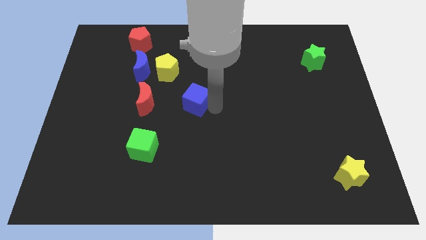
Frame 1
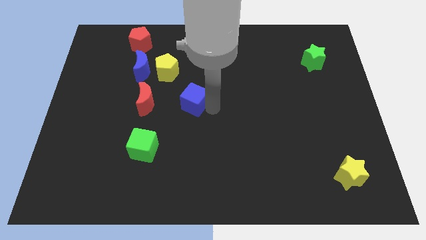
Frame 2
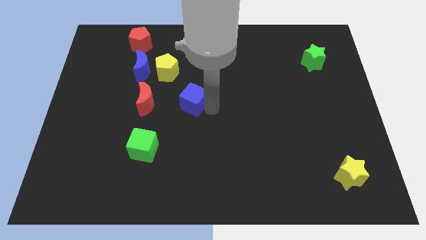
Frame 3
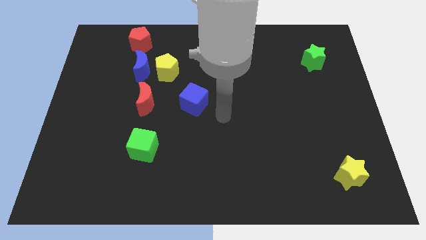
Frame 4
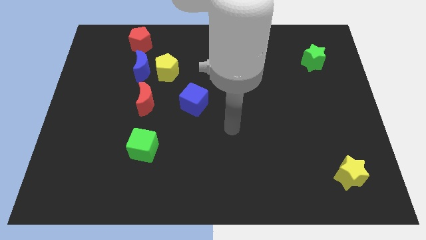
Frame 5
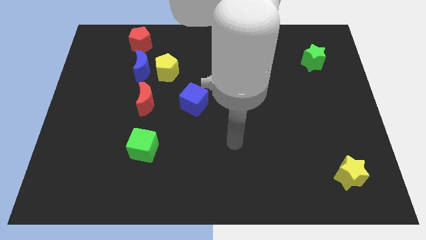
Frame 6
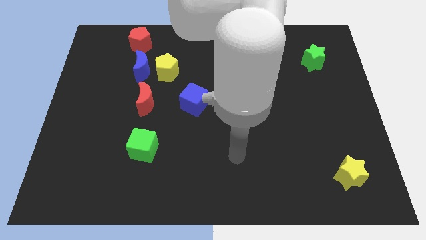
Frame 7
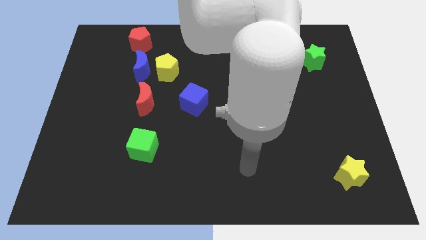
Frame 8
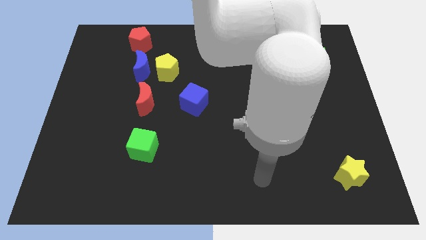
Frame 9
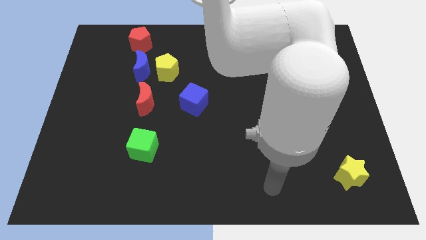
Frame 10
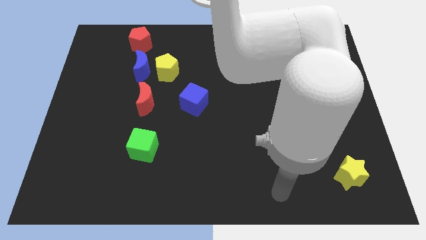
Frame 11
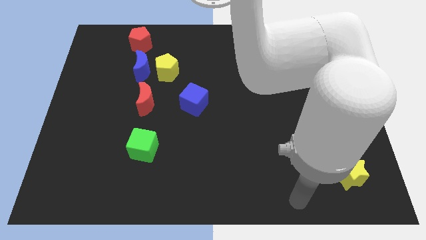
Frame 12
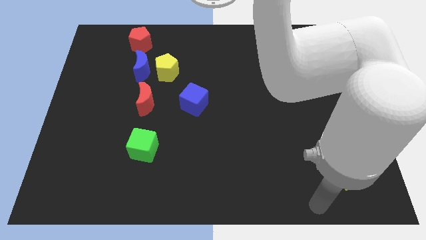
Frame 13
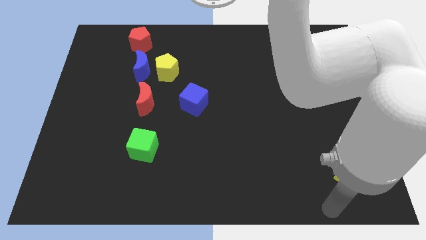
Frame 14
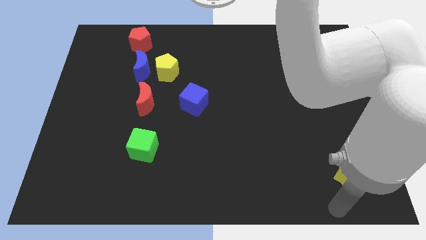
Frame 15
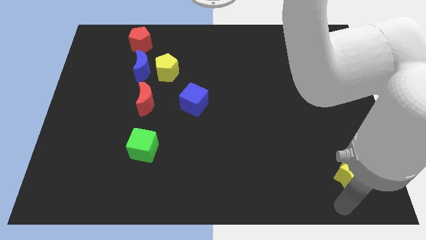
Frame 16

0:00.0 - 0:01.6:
move the blue cube right to the red moon

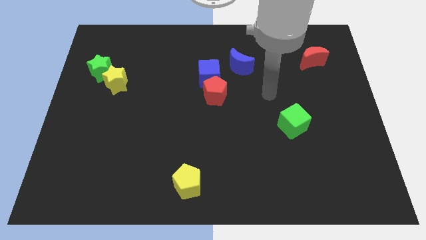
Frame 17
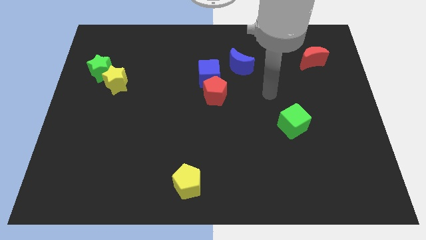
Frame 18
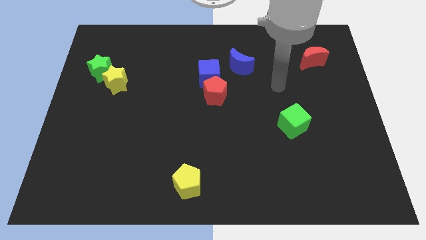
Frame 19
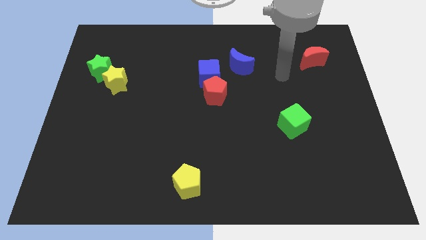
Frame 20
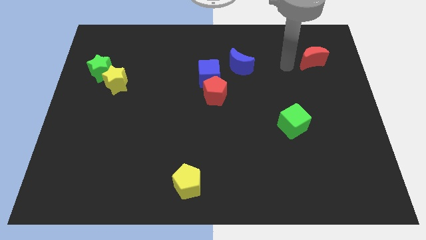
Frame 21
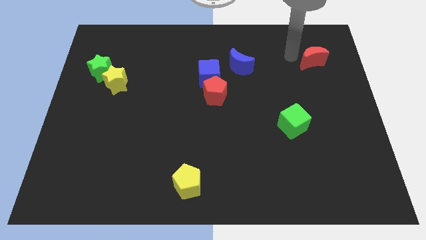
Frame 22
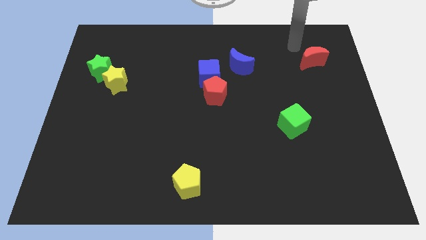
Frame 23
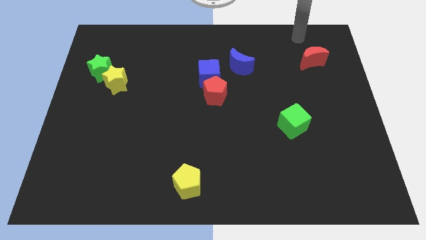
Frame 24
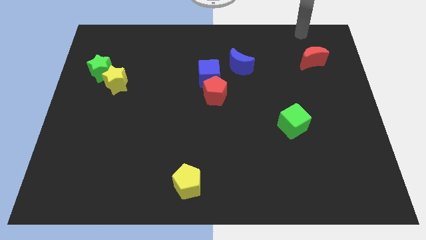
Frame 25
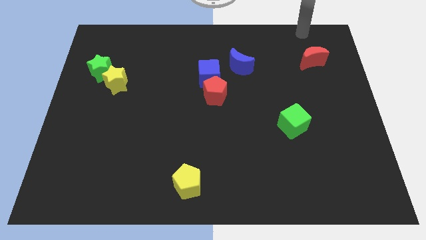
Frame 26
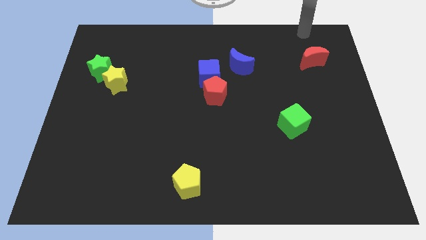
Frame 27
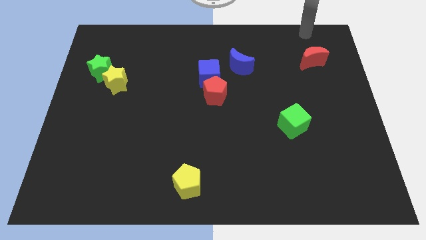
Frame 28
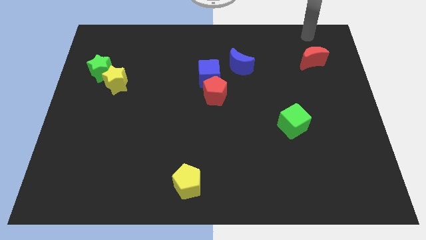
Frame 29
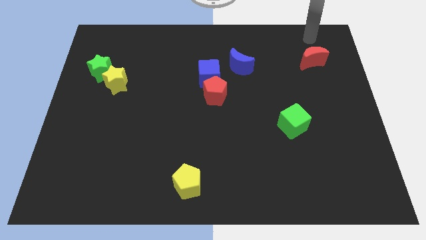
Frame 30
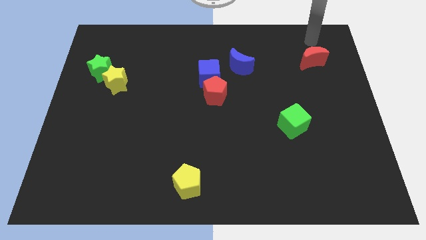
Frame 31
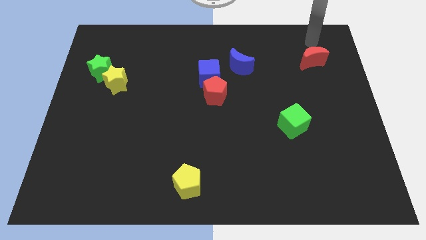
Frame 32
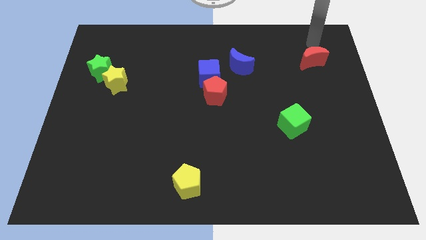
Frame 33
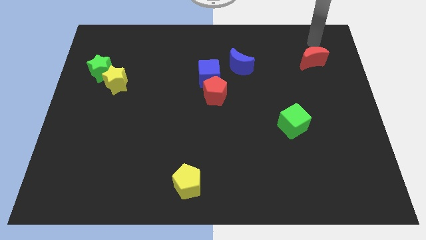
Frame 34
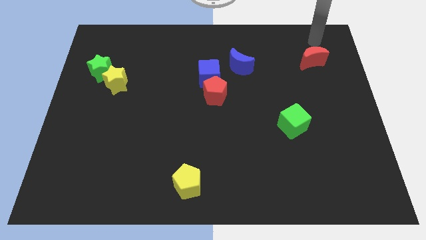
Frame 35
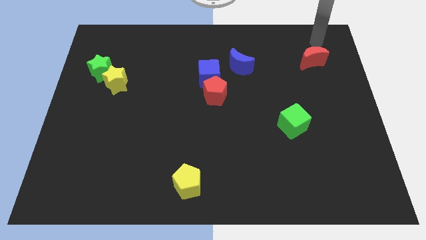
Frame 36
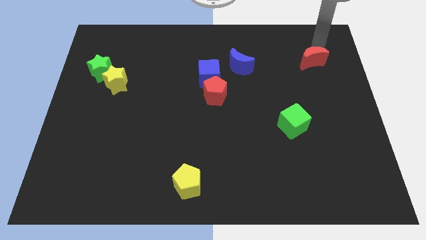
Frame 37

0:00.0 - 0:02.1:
slightly touch the red moon from top

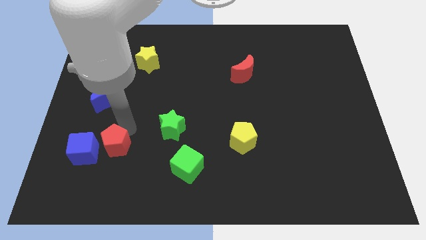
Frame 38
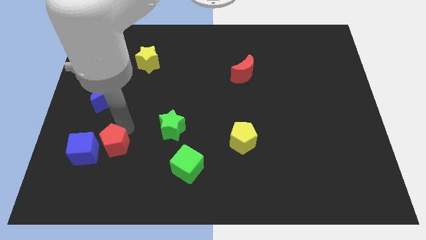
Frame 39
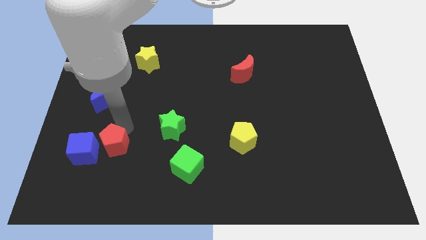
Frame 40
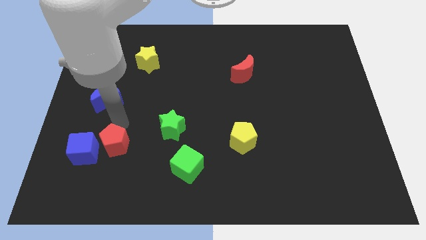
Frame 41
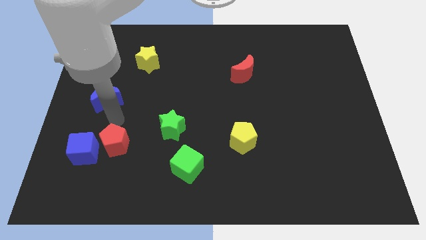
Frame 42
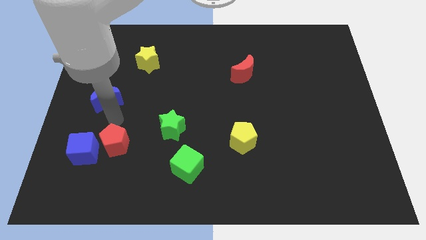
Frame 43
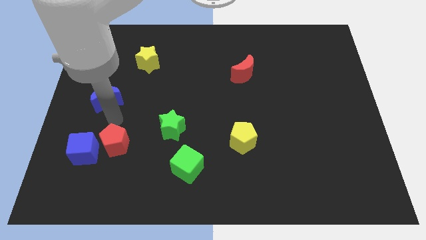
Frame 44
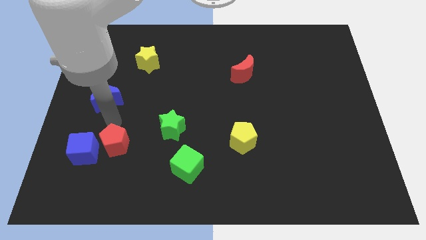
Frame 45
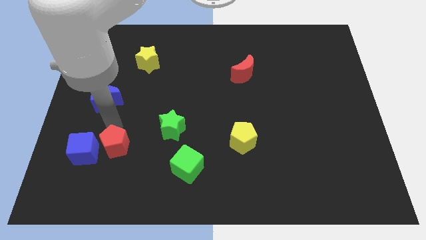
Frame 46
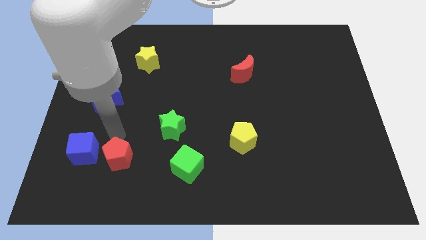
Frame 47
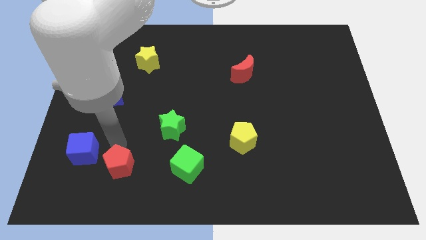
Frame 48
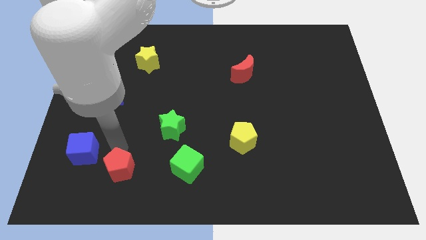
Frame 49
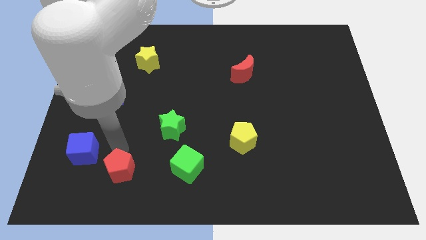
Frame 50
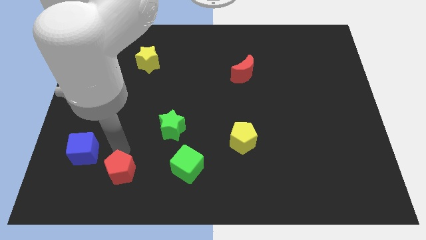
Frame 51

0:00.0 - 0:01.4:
move the red pentagon slightly downwards to the board

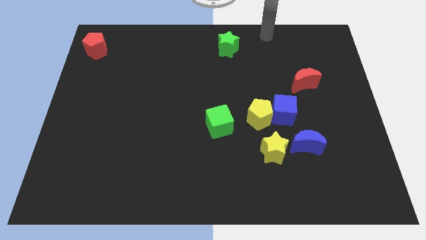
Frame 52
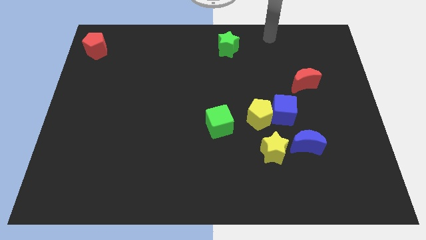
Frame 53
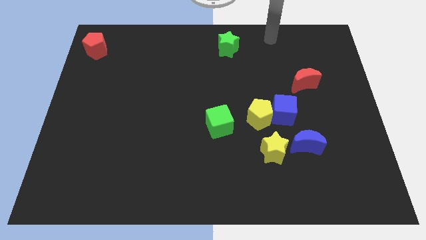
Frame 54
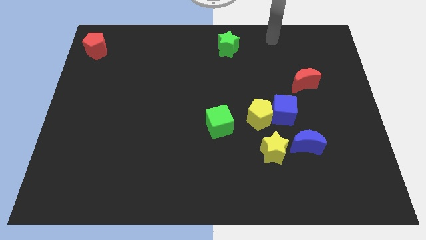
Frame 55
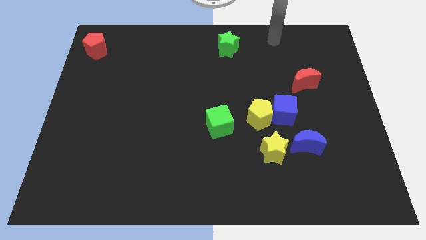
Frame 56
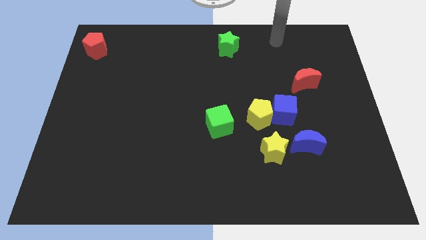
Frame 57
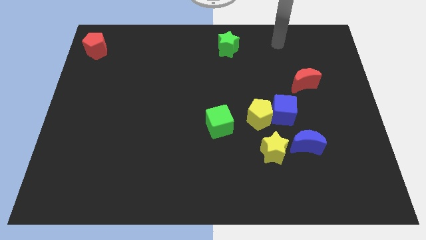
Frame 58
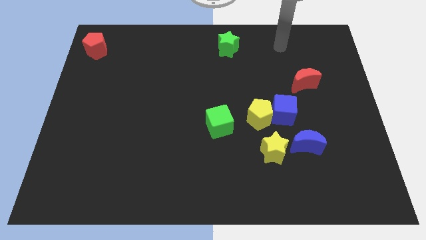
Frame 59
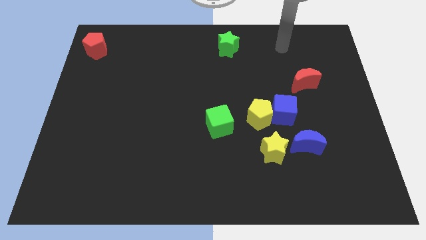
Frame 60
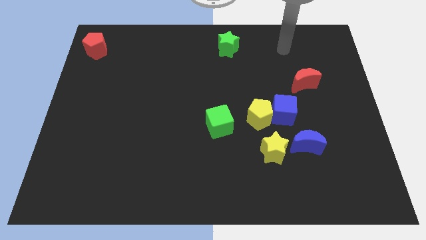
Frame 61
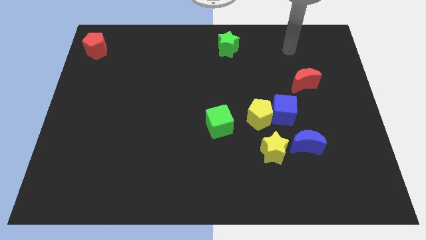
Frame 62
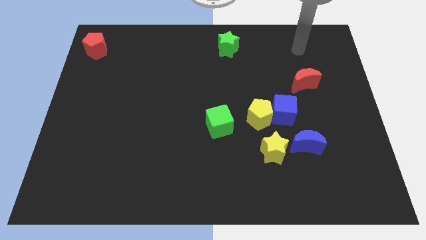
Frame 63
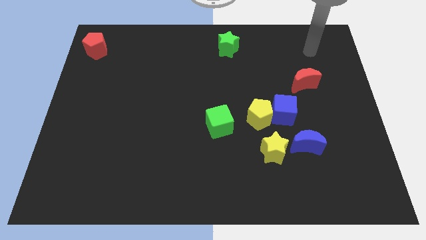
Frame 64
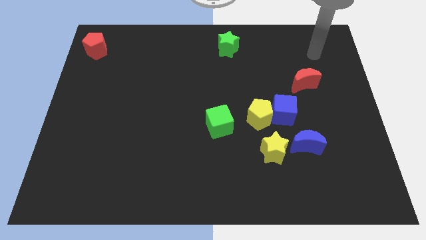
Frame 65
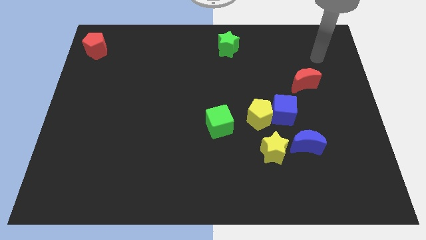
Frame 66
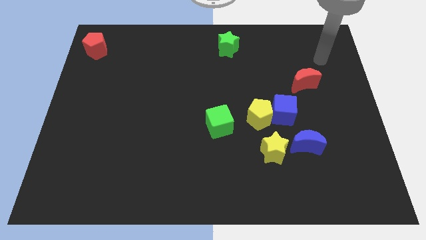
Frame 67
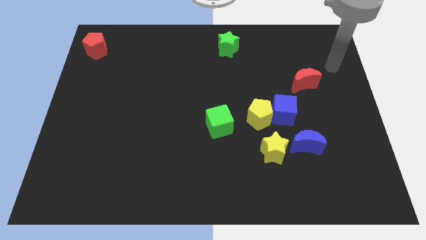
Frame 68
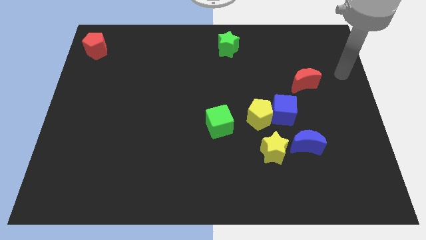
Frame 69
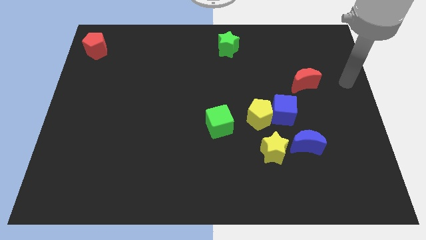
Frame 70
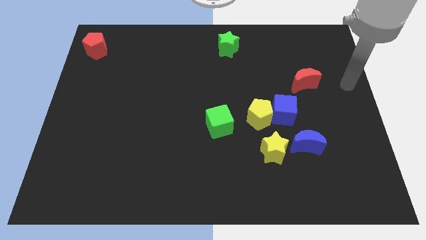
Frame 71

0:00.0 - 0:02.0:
point your arm at the right of the red crescent

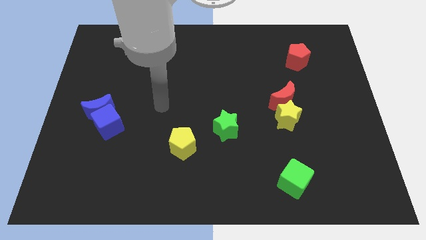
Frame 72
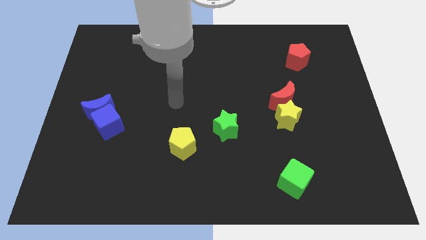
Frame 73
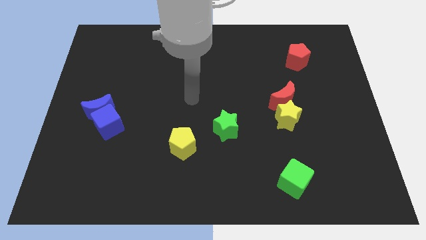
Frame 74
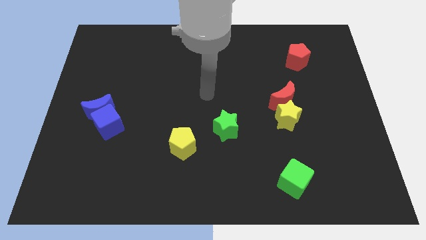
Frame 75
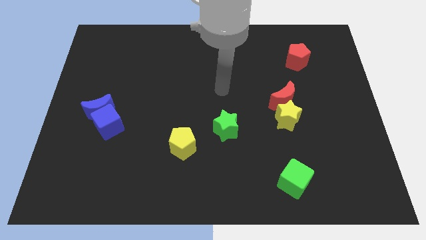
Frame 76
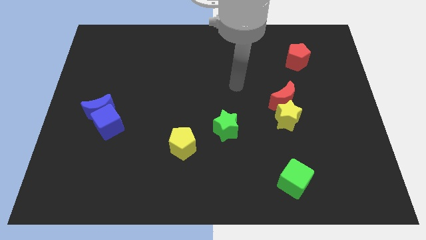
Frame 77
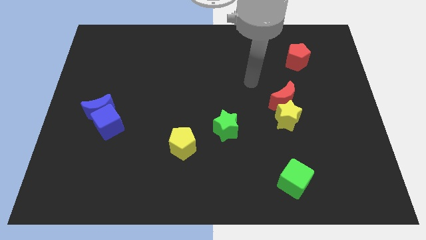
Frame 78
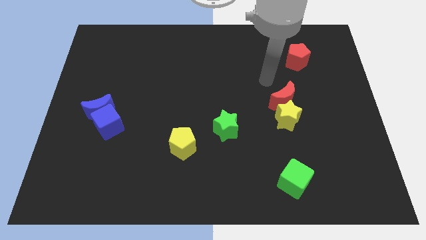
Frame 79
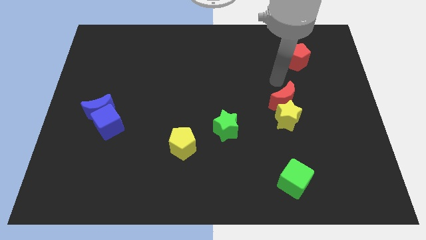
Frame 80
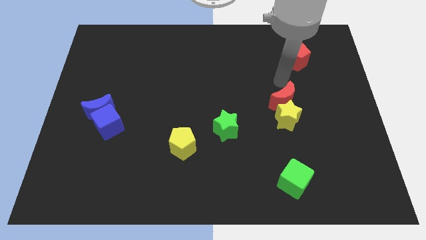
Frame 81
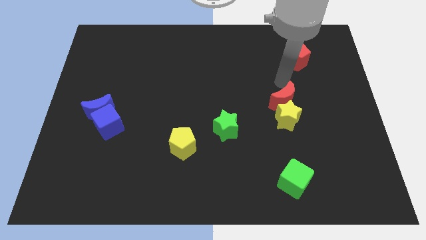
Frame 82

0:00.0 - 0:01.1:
point your arm at the top of the red crescent

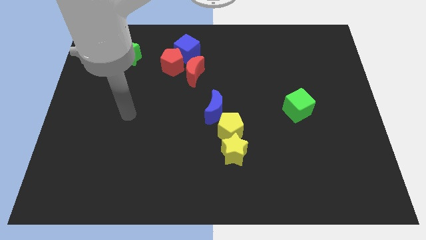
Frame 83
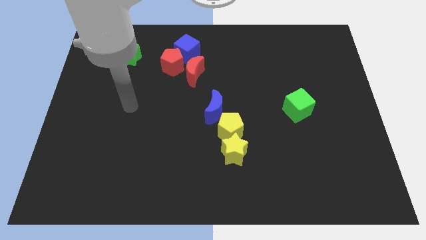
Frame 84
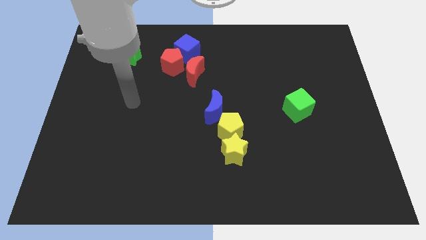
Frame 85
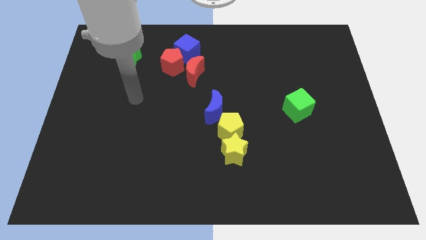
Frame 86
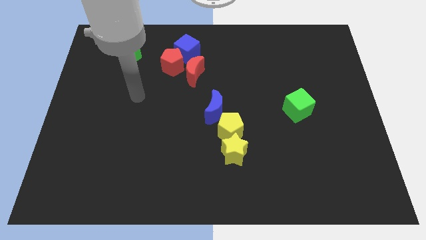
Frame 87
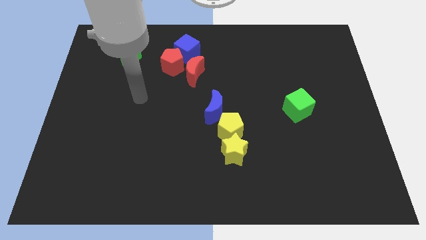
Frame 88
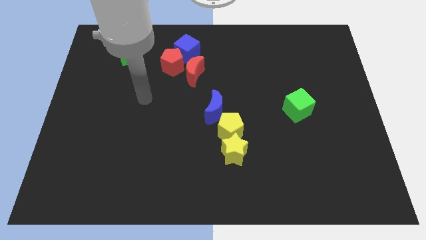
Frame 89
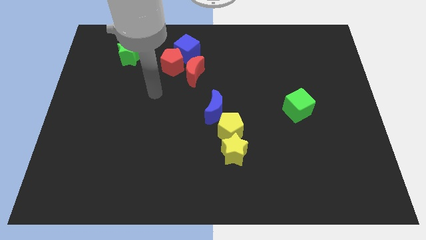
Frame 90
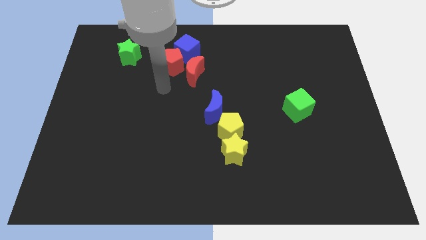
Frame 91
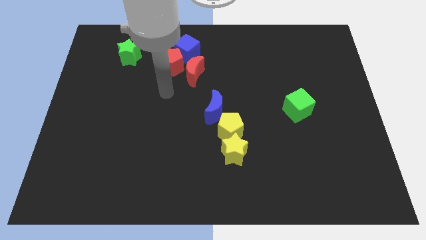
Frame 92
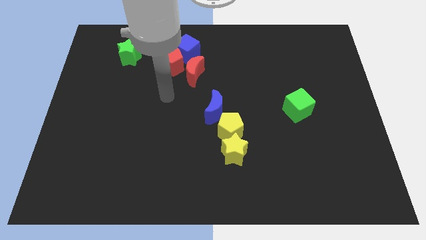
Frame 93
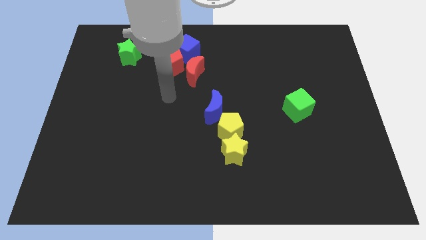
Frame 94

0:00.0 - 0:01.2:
point your hand at the bottom side of the red pentagon
